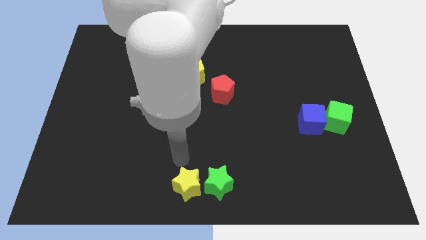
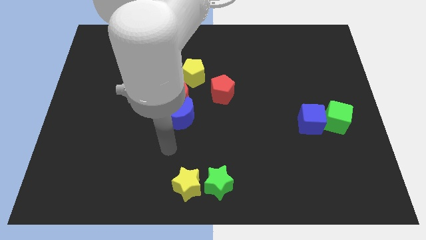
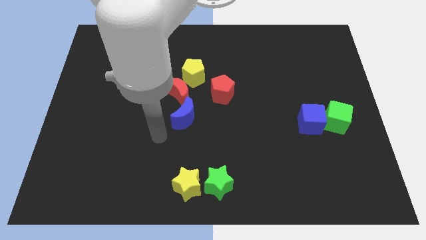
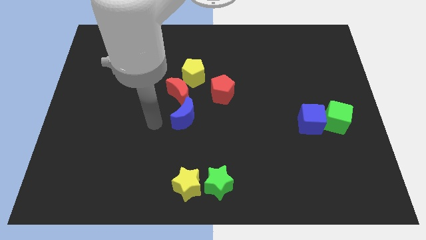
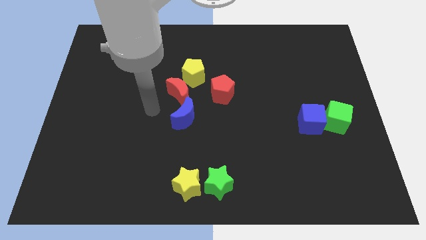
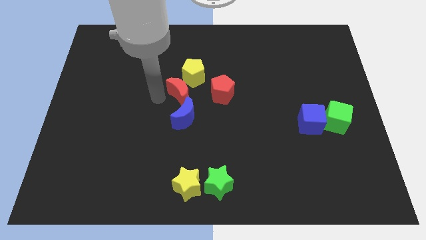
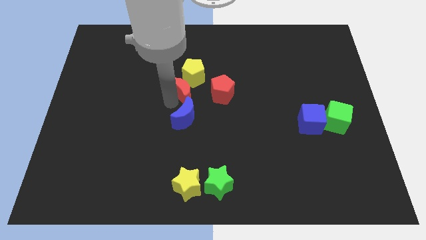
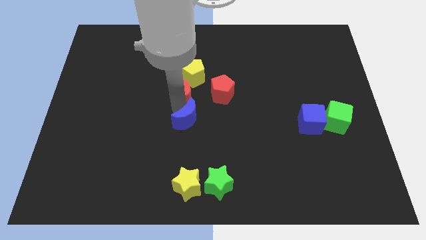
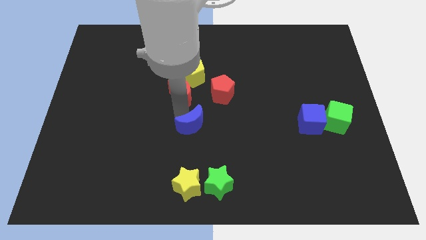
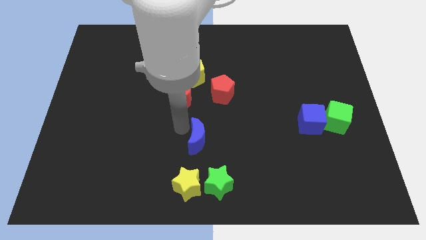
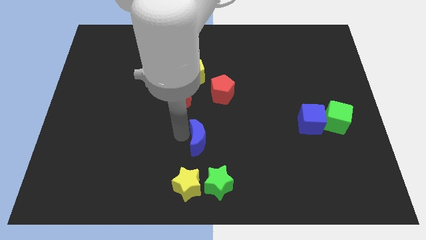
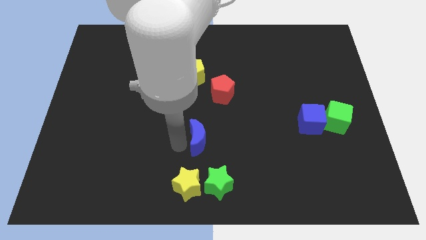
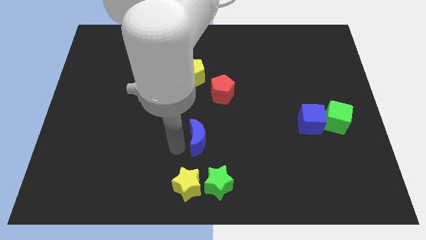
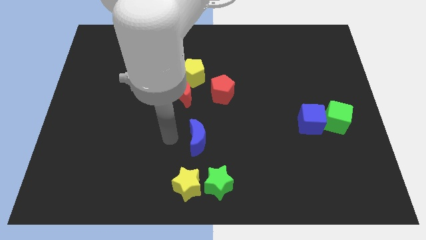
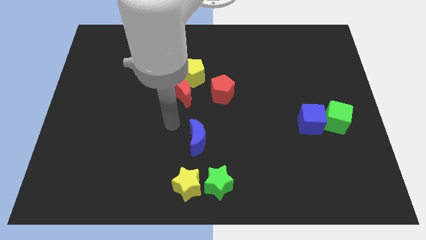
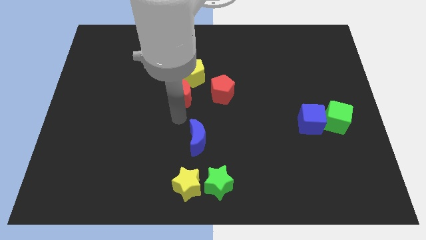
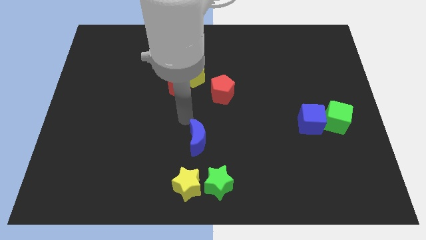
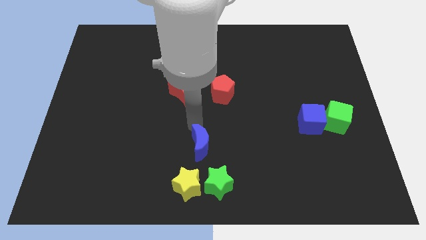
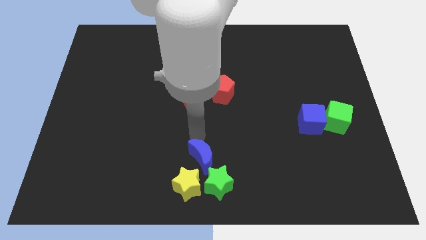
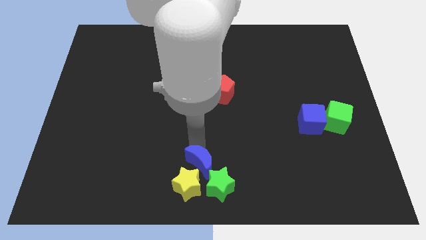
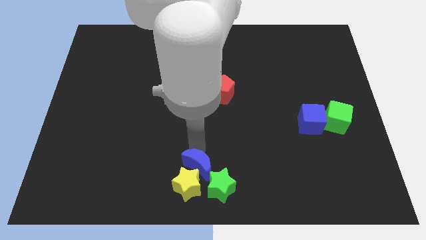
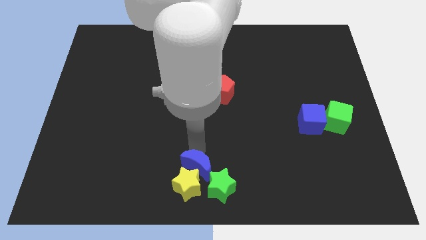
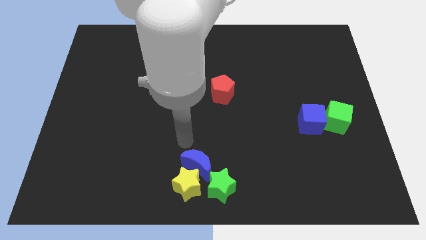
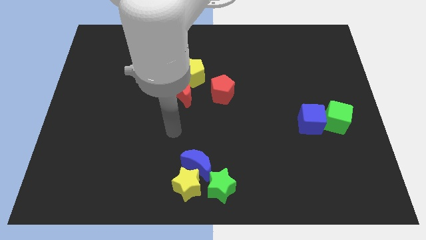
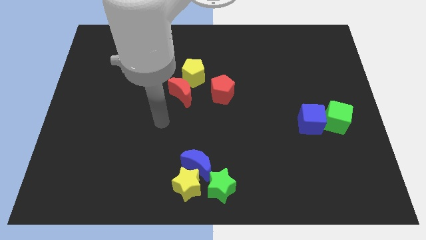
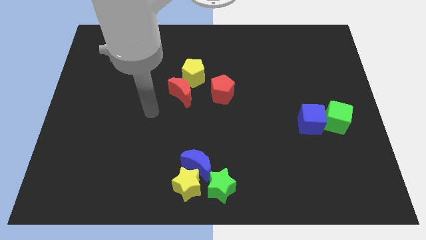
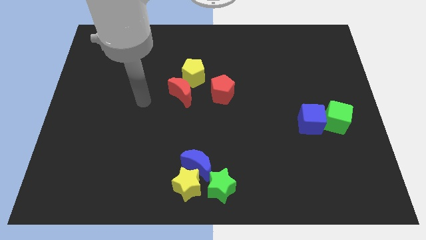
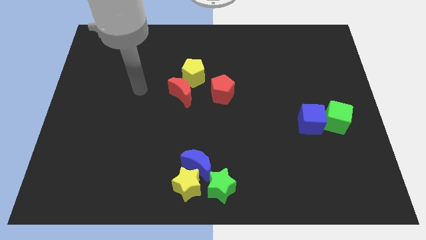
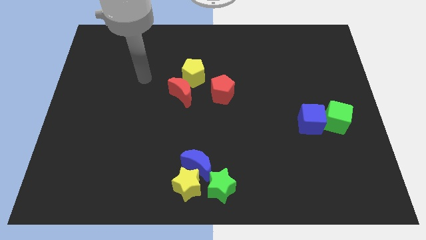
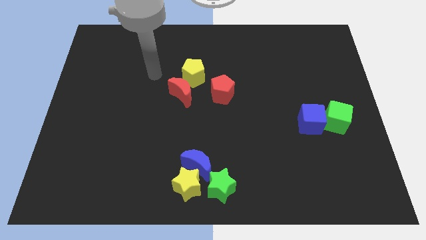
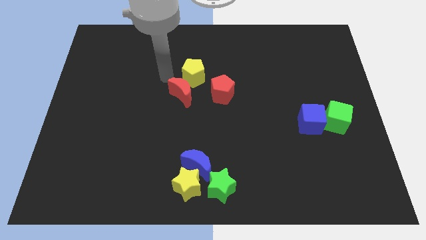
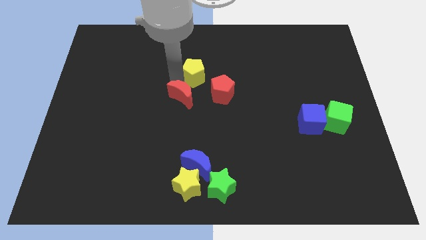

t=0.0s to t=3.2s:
push the blue moon to the bottom center of the board

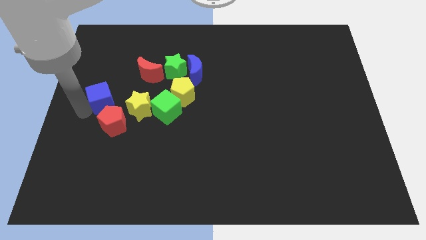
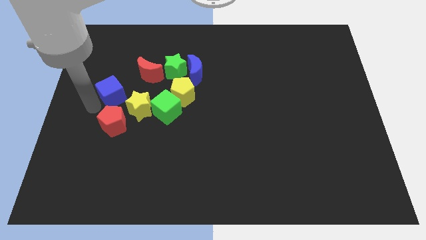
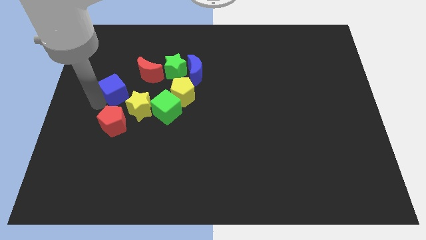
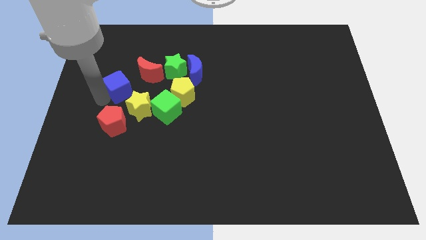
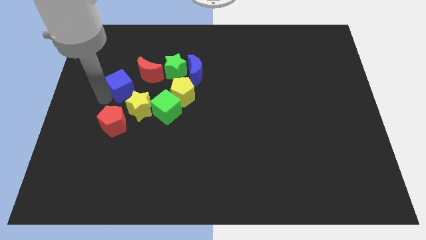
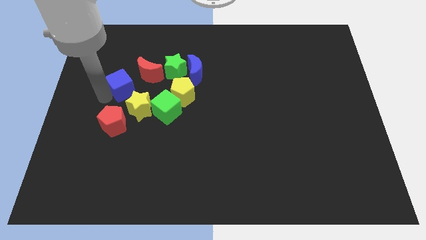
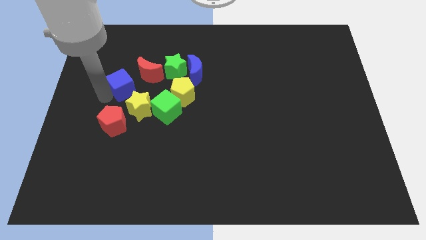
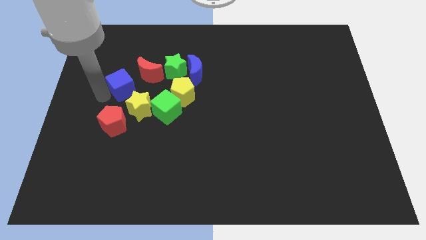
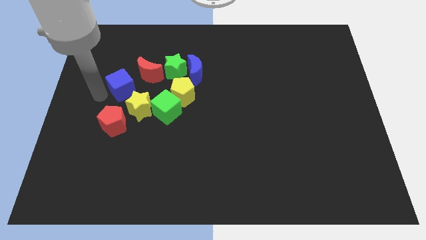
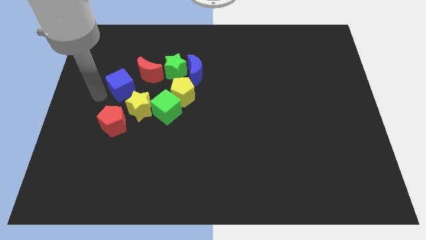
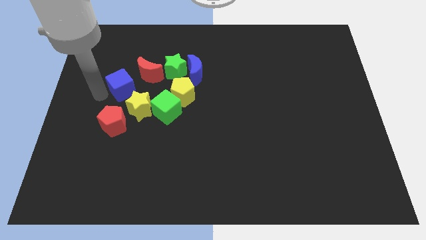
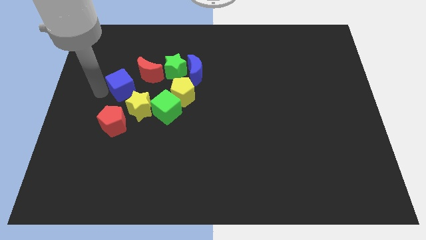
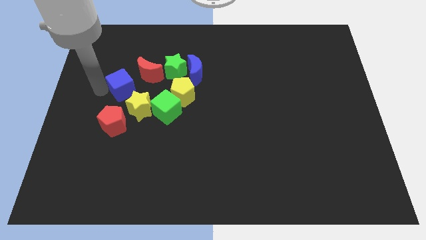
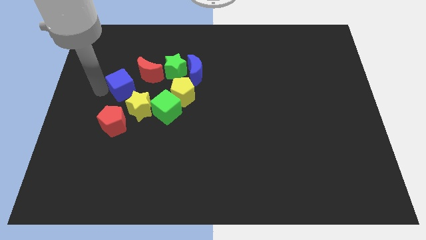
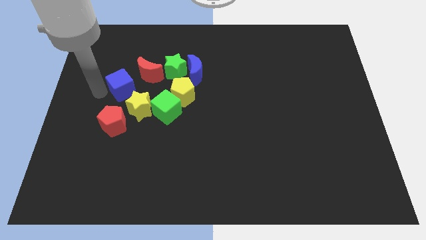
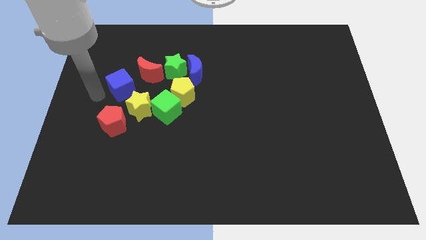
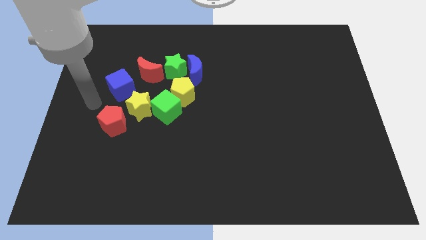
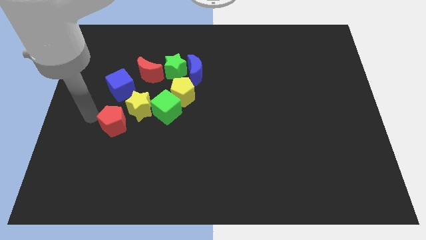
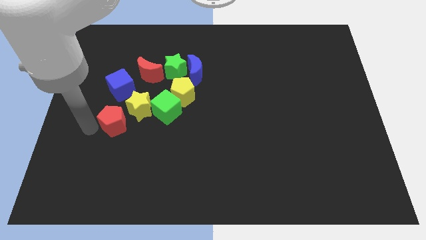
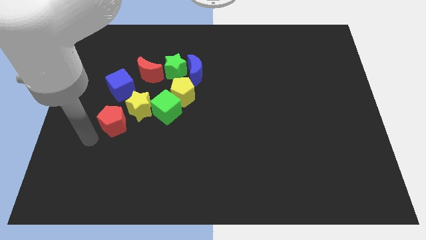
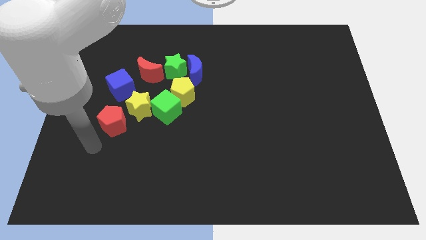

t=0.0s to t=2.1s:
push the blue cube towards red crescent

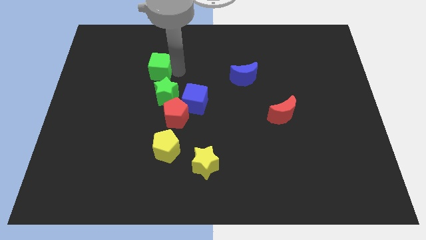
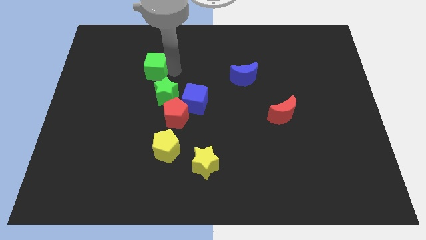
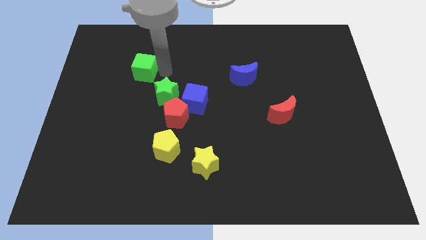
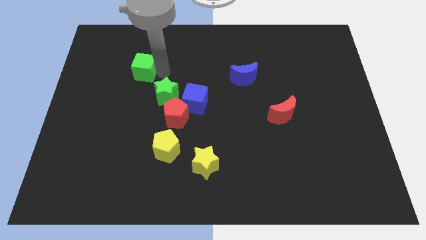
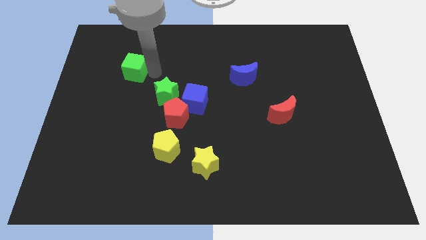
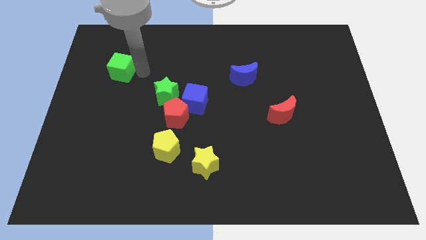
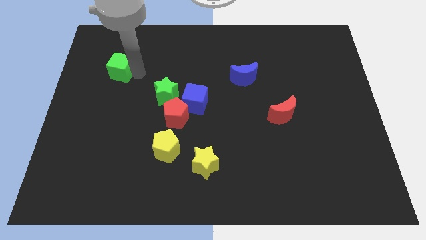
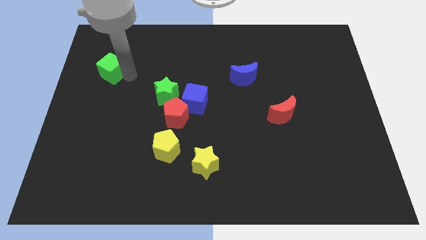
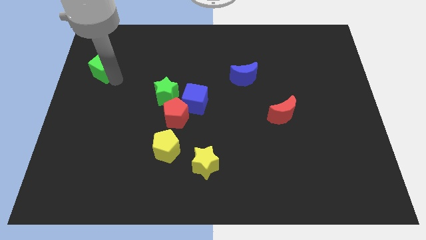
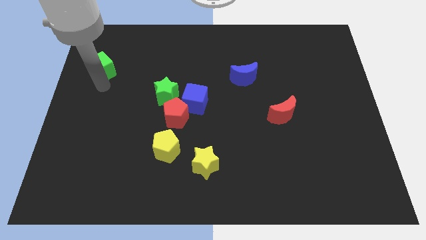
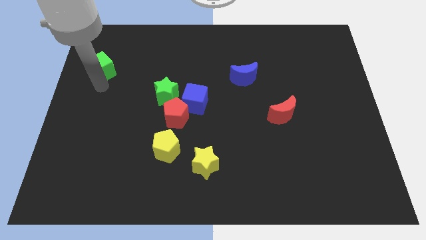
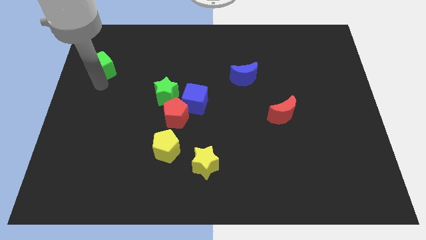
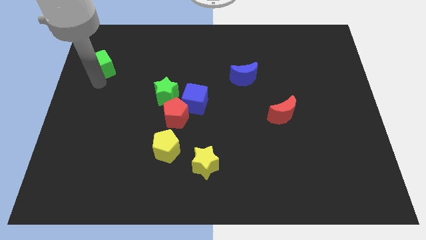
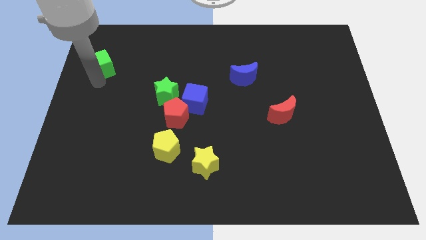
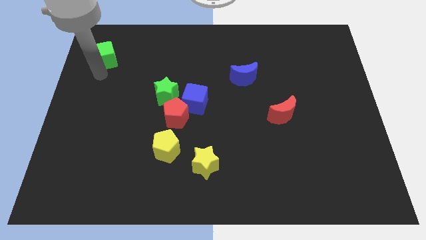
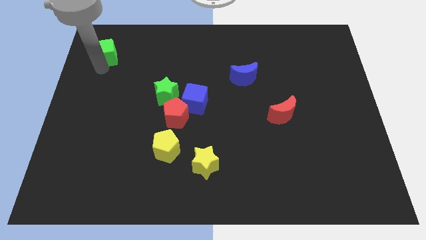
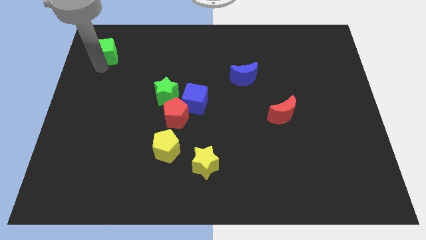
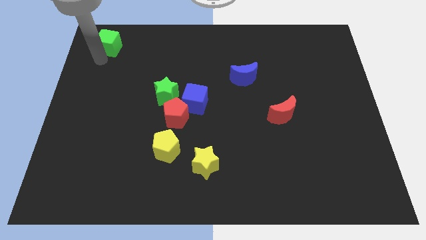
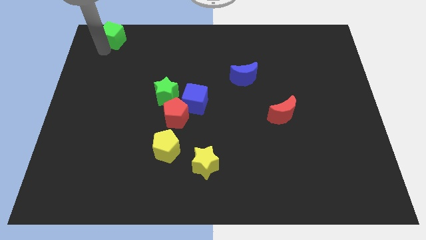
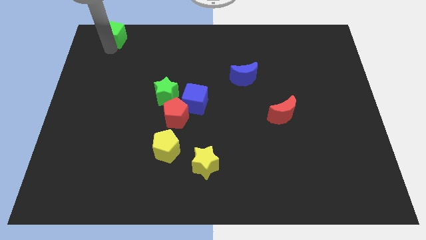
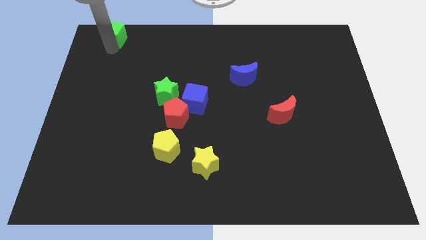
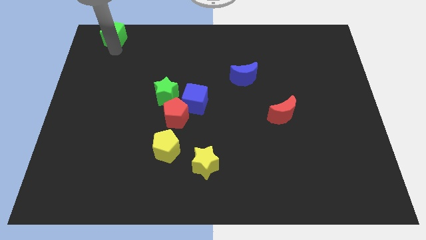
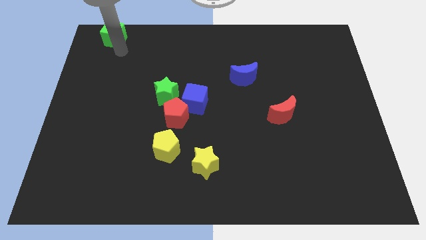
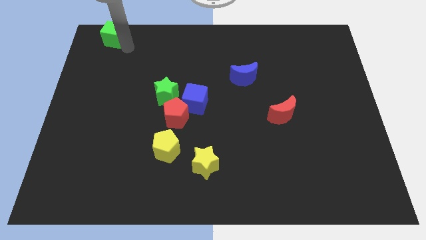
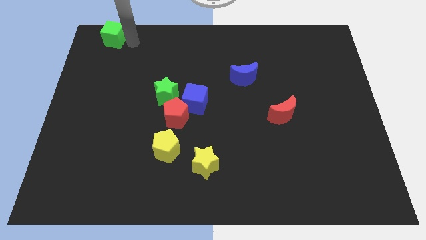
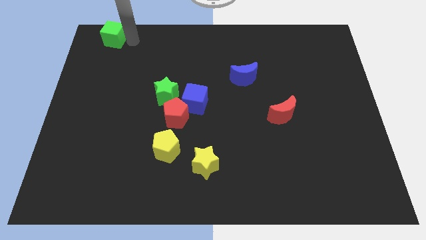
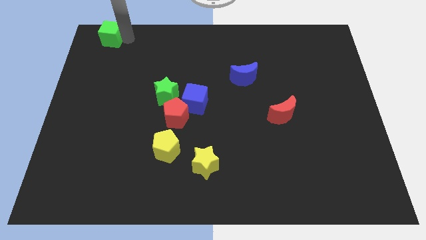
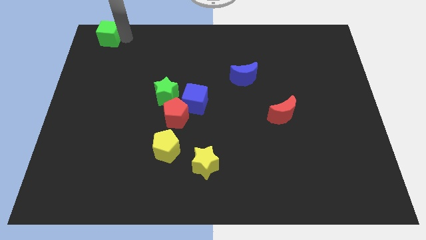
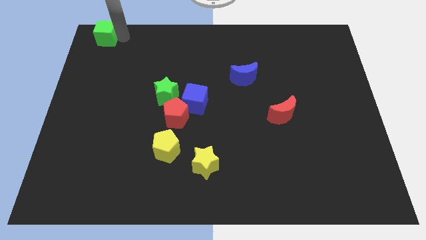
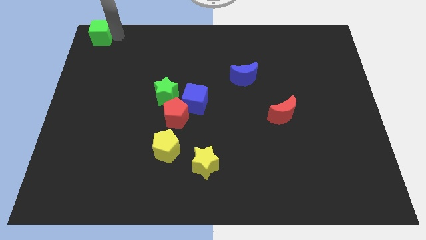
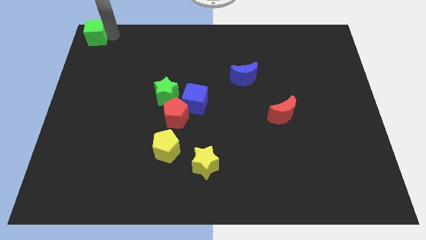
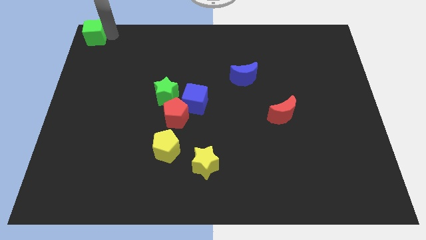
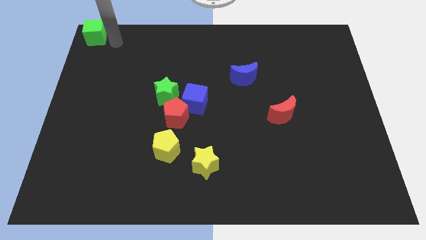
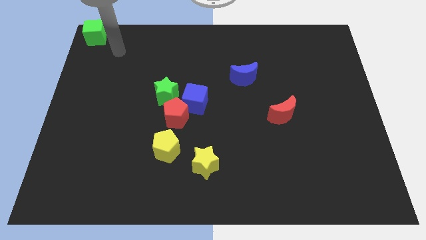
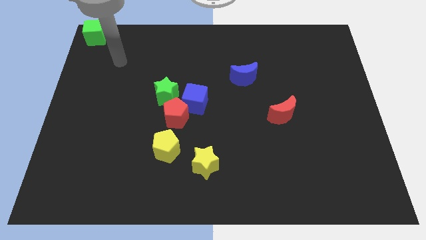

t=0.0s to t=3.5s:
place the green cube at the top left corner

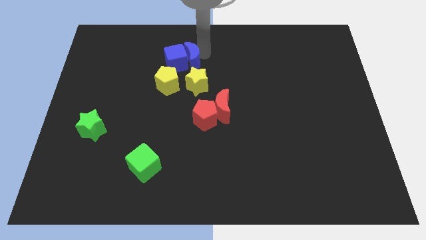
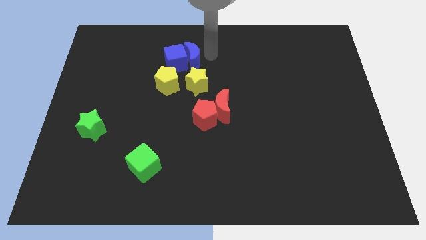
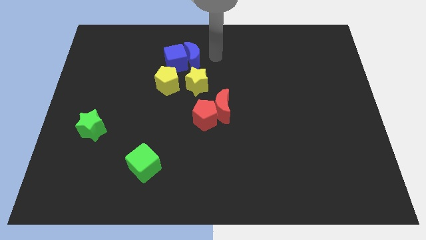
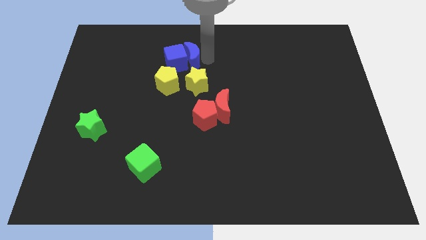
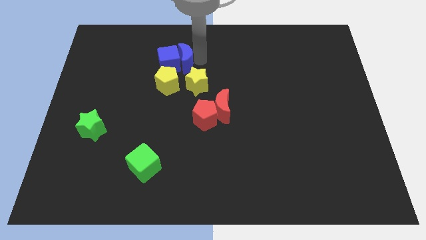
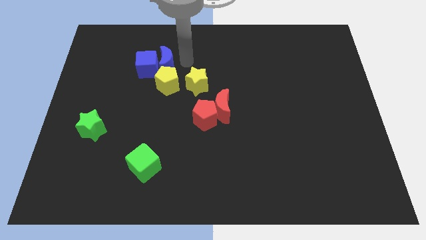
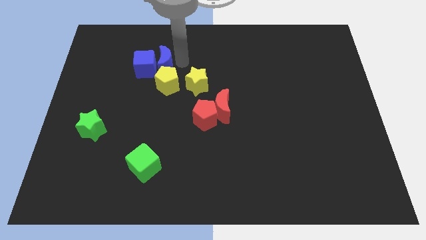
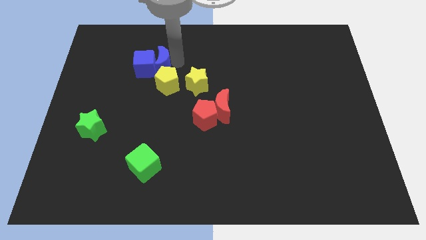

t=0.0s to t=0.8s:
push the blue blocks to the left
